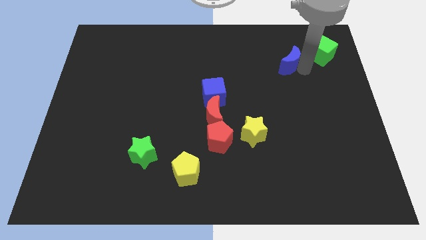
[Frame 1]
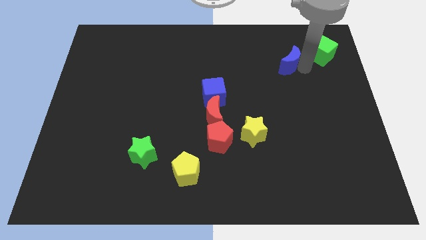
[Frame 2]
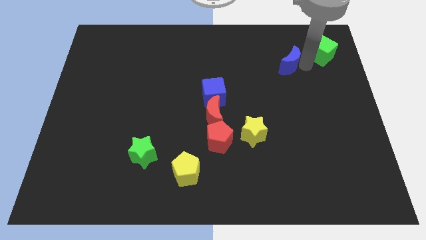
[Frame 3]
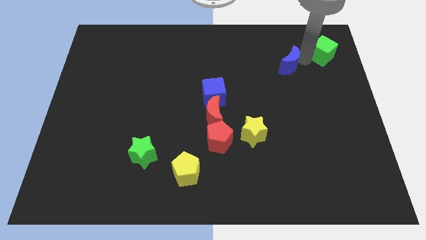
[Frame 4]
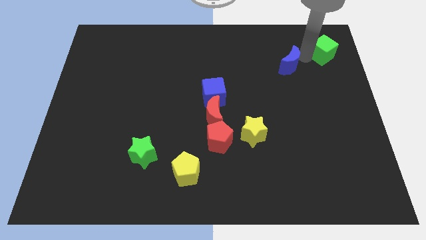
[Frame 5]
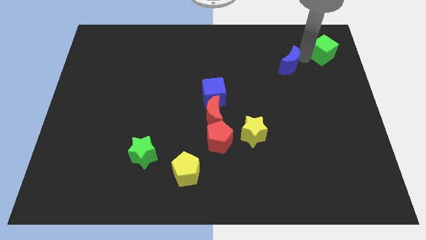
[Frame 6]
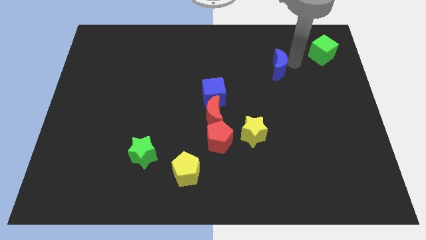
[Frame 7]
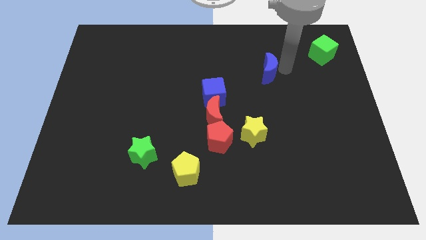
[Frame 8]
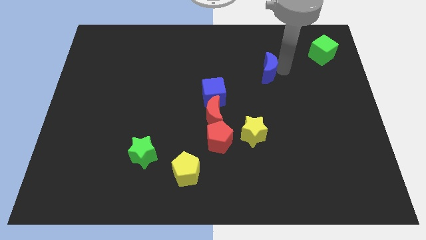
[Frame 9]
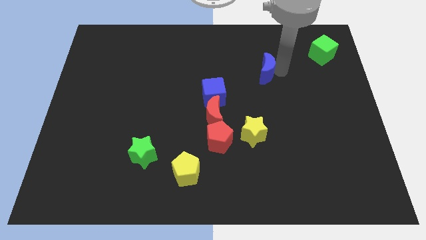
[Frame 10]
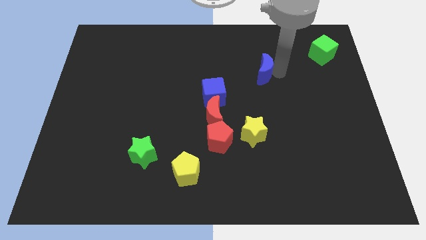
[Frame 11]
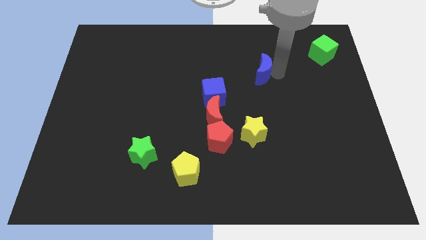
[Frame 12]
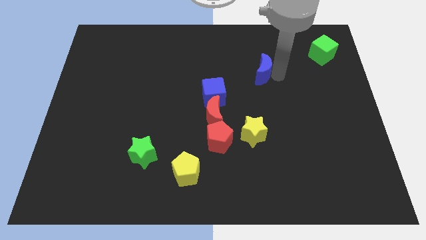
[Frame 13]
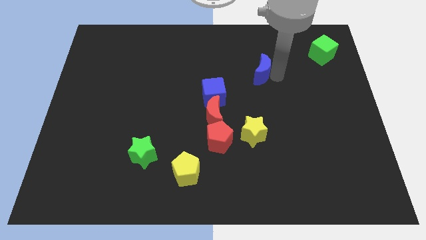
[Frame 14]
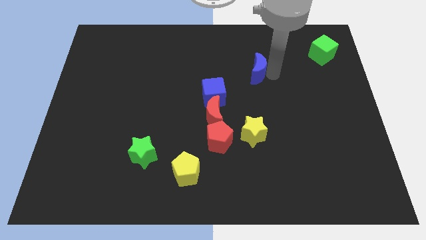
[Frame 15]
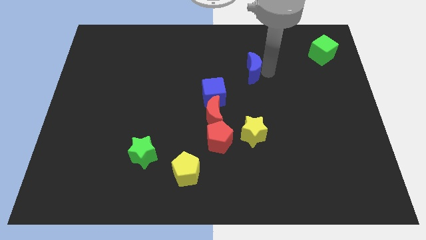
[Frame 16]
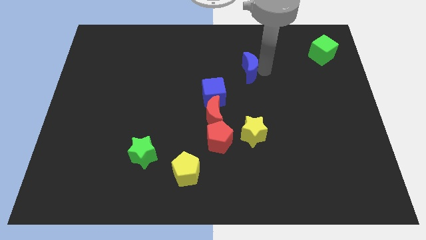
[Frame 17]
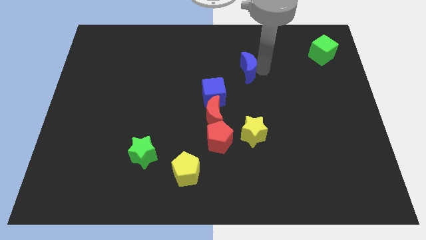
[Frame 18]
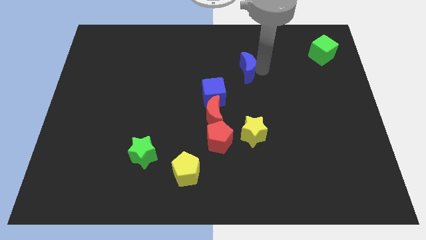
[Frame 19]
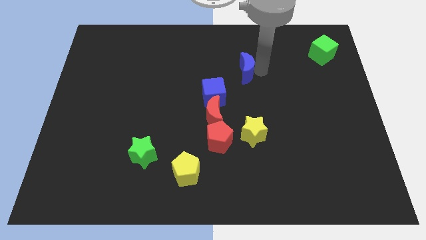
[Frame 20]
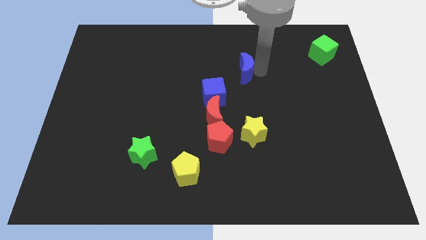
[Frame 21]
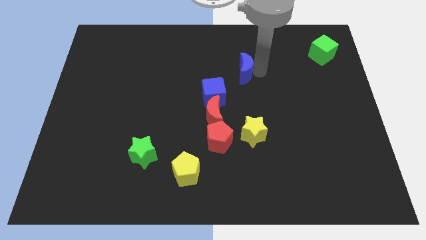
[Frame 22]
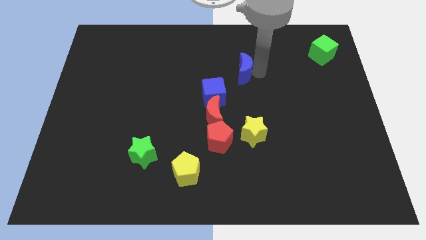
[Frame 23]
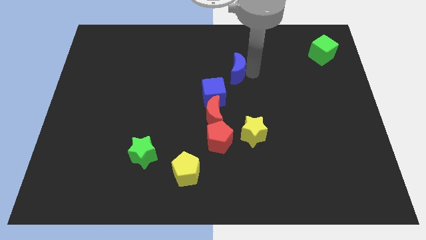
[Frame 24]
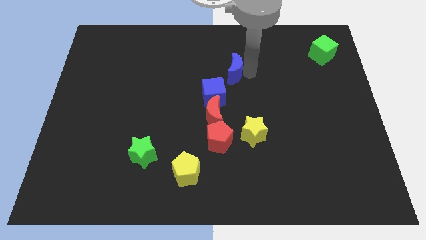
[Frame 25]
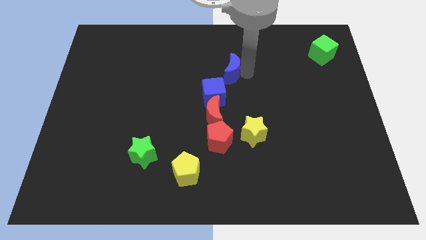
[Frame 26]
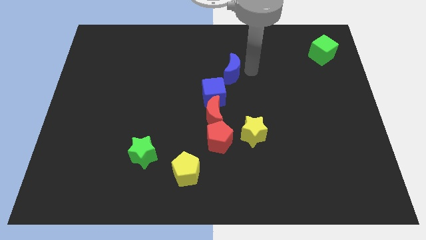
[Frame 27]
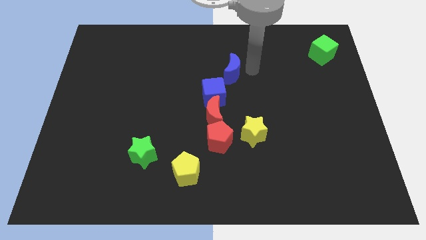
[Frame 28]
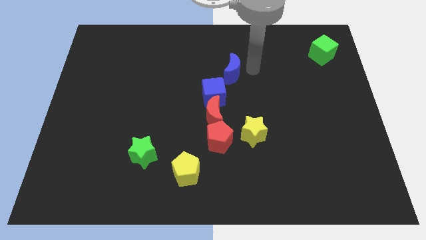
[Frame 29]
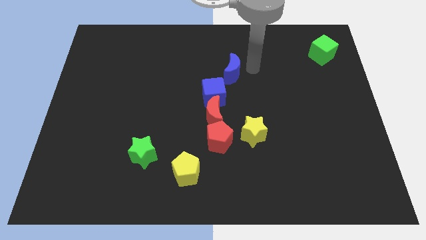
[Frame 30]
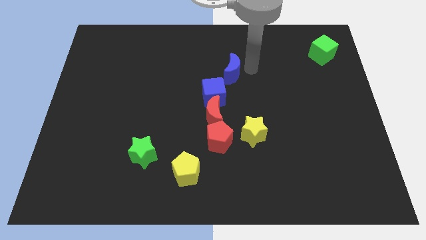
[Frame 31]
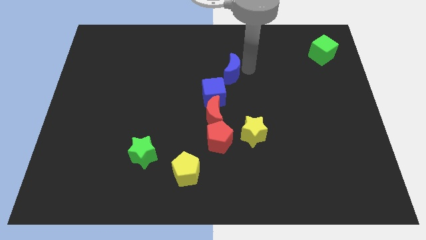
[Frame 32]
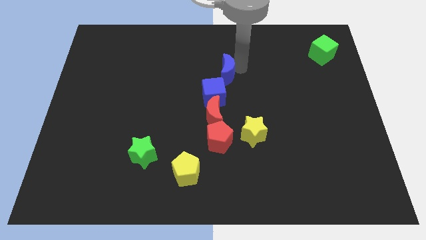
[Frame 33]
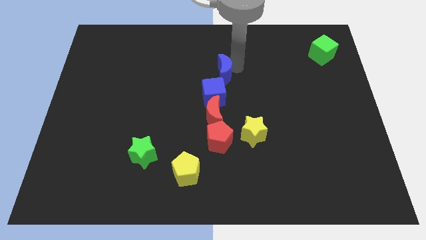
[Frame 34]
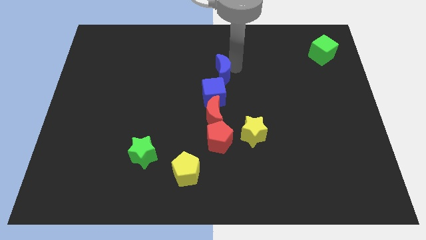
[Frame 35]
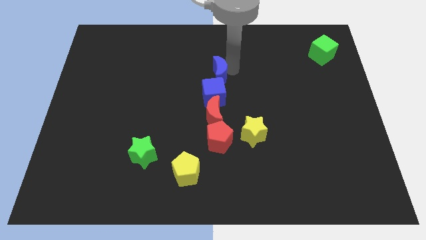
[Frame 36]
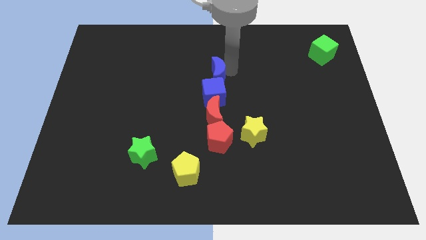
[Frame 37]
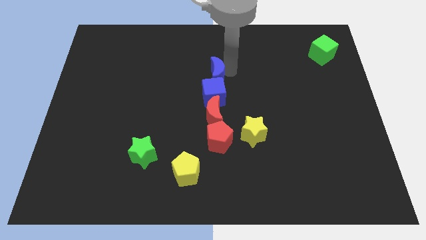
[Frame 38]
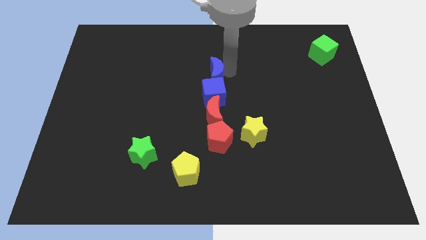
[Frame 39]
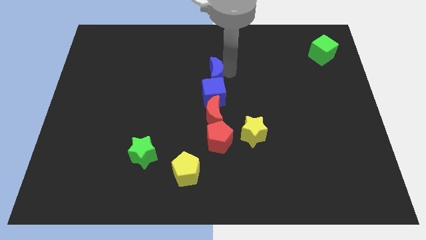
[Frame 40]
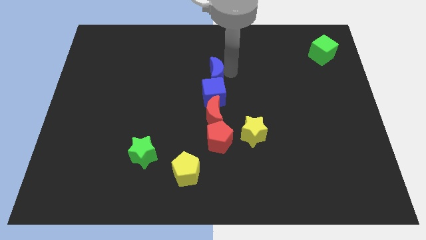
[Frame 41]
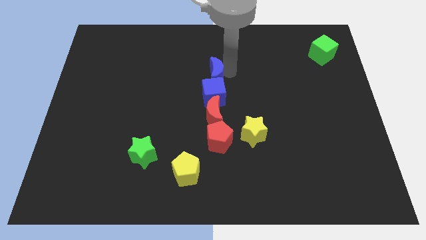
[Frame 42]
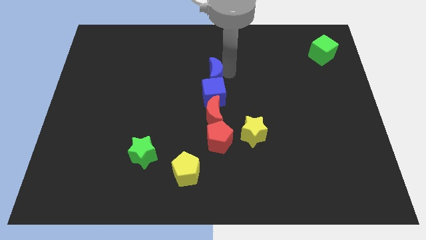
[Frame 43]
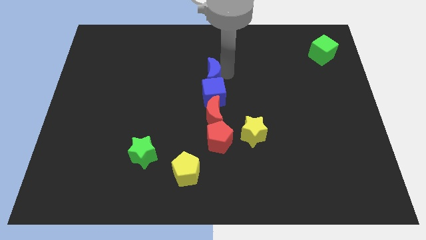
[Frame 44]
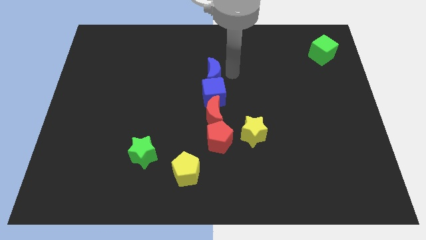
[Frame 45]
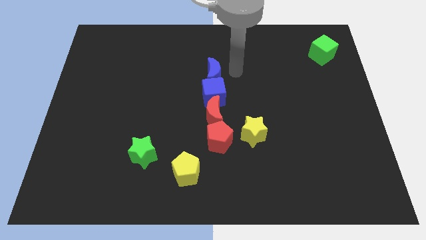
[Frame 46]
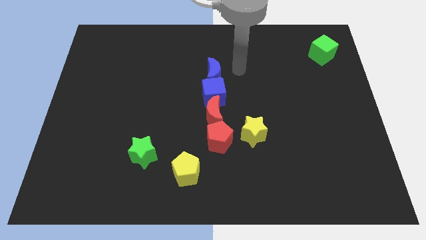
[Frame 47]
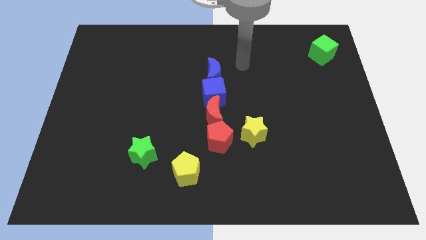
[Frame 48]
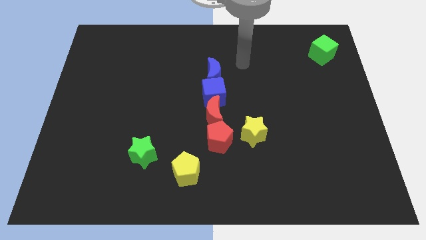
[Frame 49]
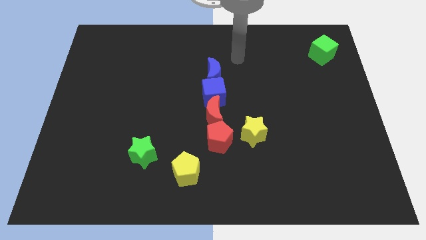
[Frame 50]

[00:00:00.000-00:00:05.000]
place blue crescent above blue cube

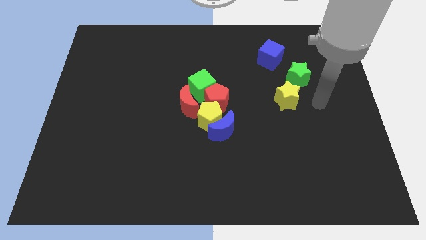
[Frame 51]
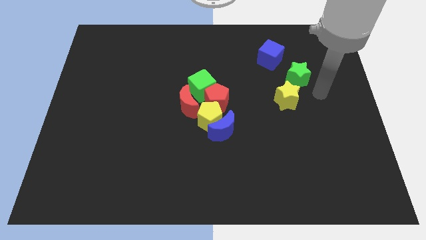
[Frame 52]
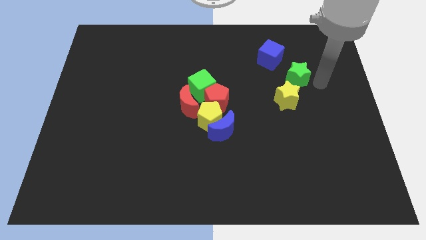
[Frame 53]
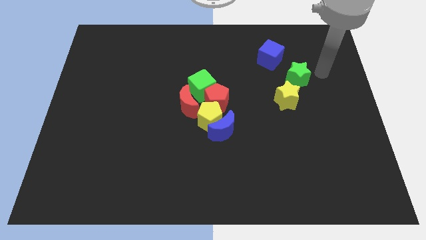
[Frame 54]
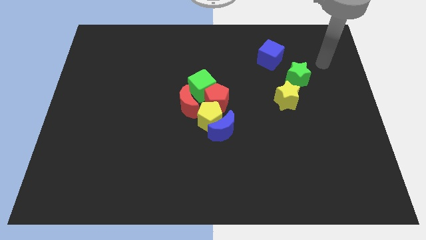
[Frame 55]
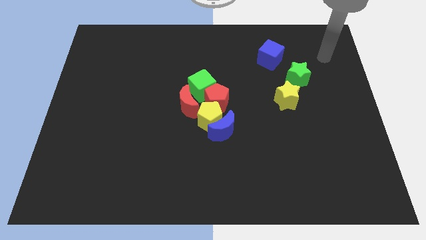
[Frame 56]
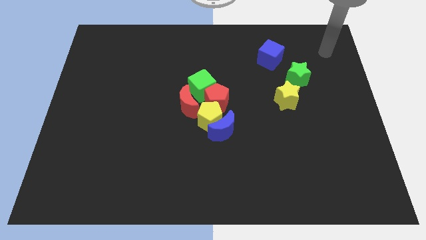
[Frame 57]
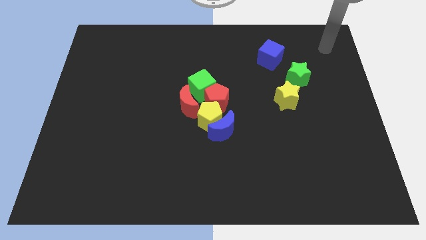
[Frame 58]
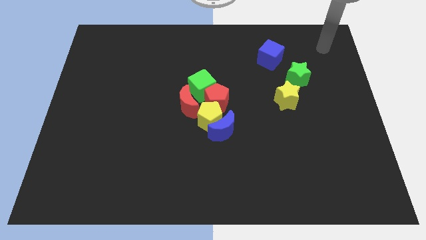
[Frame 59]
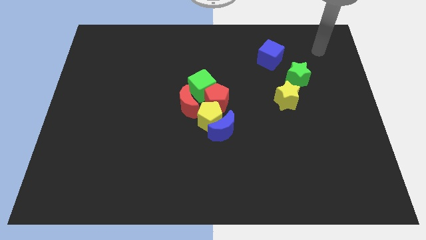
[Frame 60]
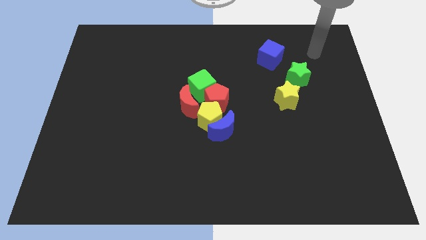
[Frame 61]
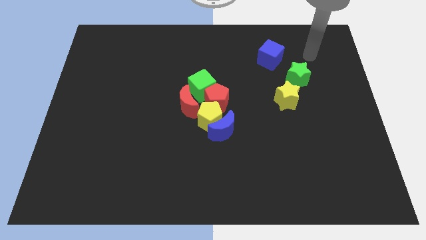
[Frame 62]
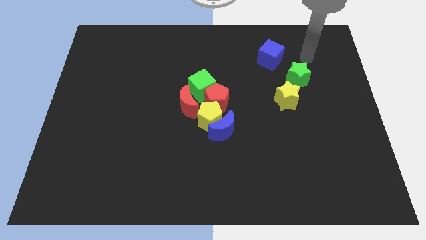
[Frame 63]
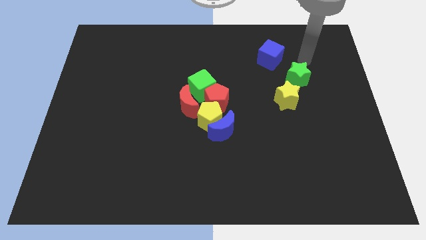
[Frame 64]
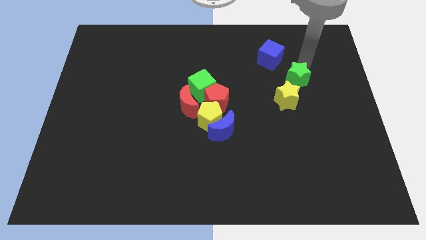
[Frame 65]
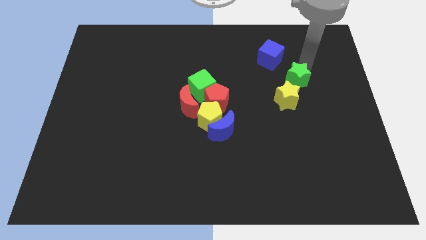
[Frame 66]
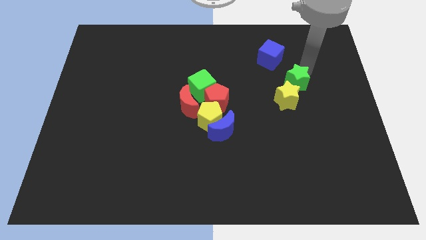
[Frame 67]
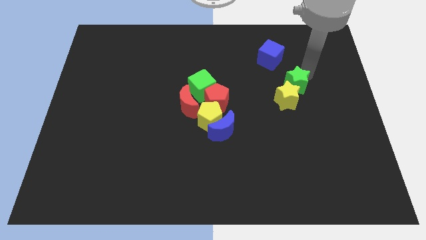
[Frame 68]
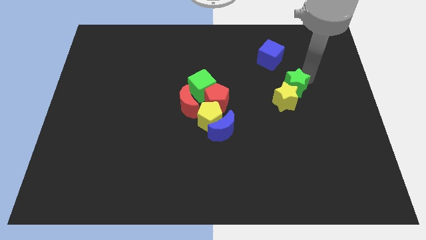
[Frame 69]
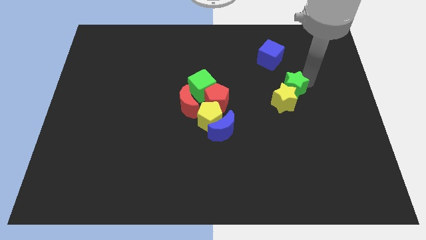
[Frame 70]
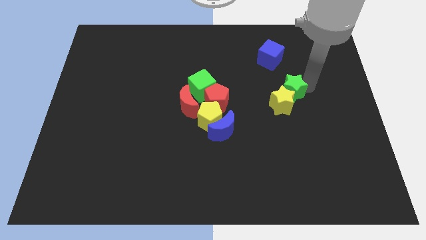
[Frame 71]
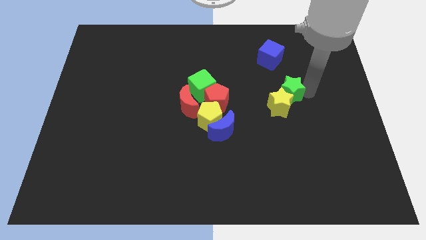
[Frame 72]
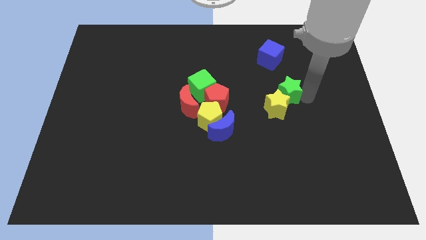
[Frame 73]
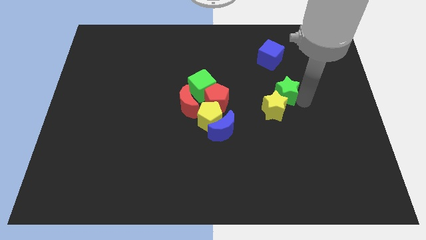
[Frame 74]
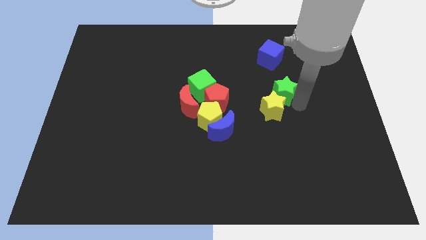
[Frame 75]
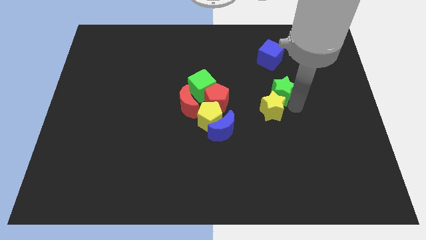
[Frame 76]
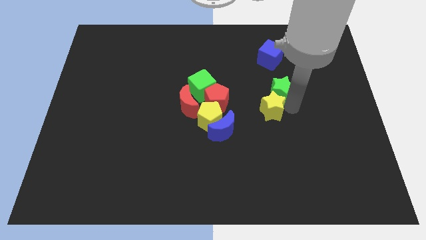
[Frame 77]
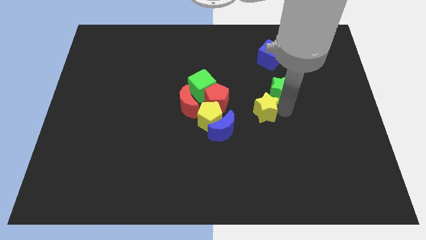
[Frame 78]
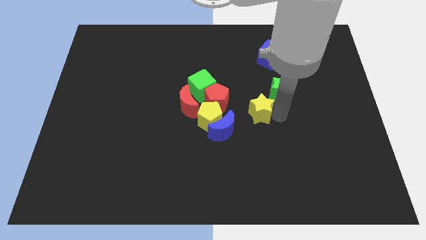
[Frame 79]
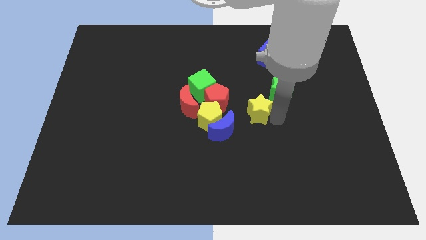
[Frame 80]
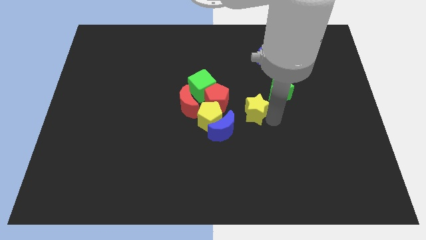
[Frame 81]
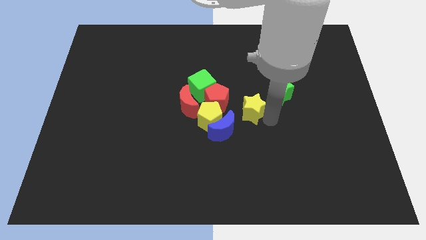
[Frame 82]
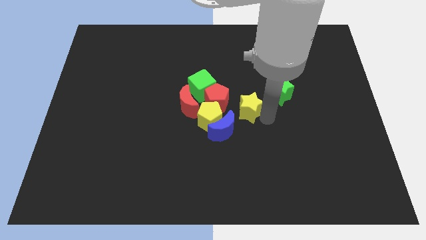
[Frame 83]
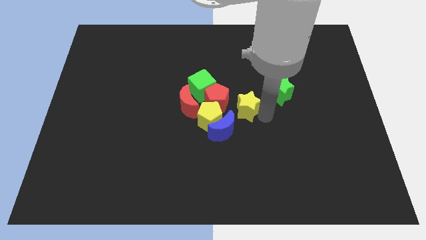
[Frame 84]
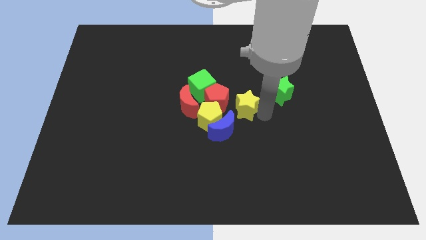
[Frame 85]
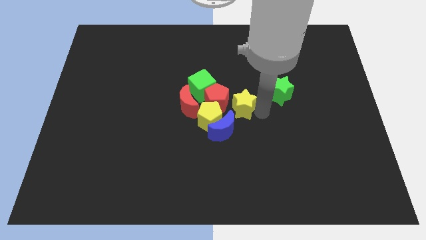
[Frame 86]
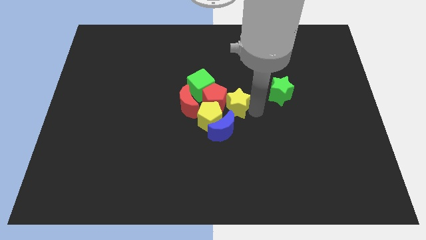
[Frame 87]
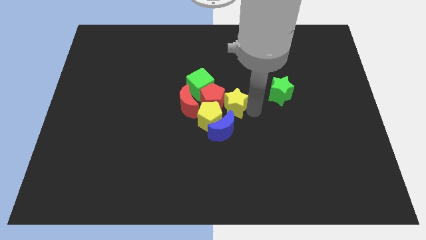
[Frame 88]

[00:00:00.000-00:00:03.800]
slide the yellow star into the red pentagon
